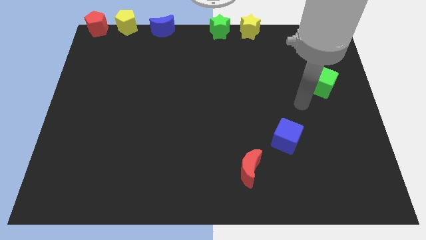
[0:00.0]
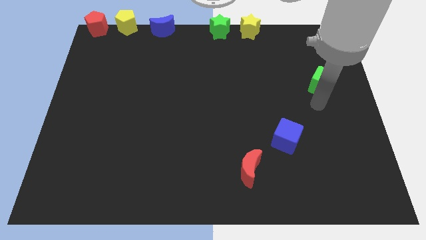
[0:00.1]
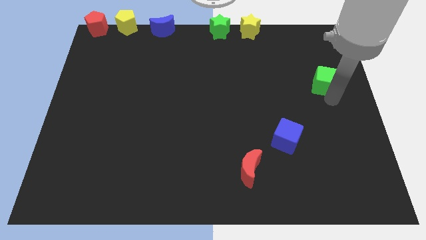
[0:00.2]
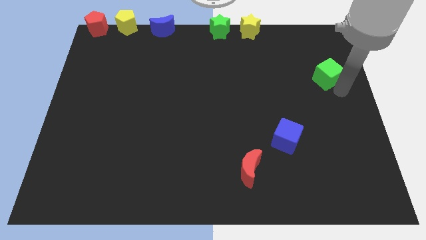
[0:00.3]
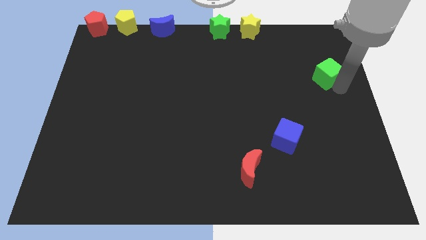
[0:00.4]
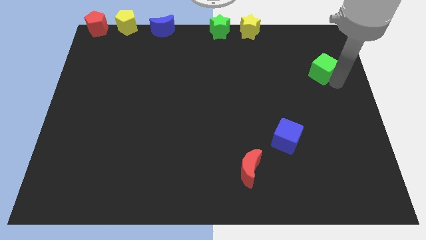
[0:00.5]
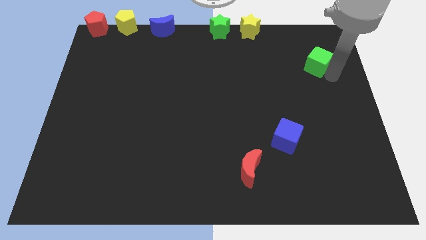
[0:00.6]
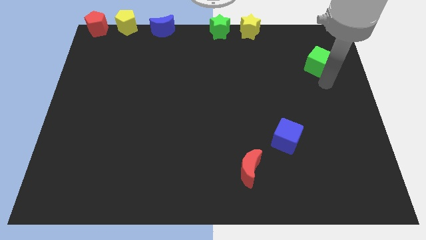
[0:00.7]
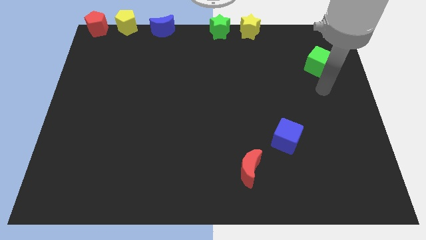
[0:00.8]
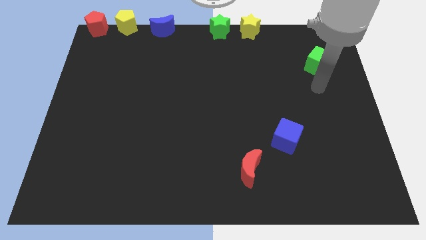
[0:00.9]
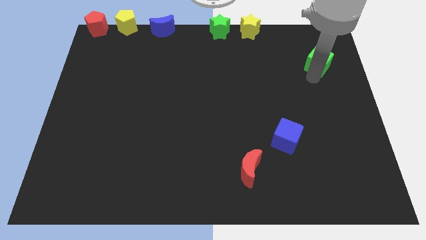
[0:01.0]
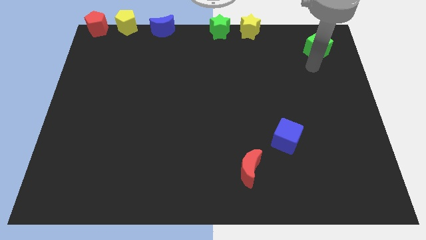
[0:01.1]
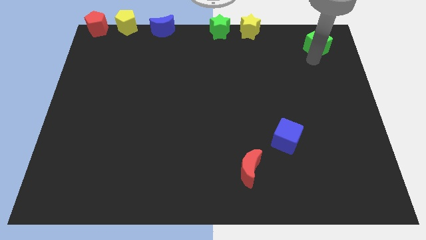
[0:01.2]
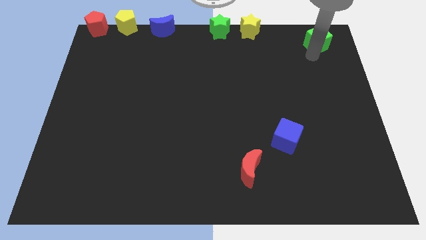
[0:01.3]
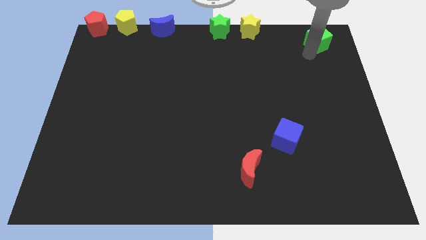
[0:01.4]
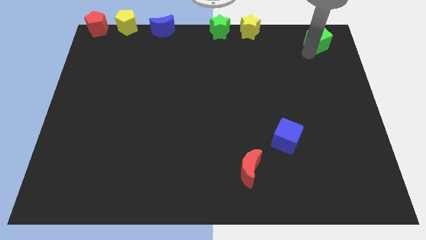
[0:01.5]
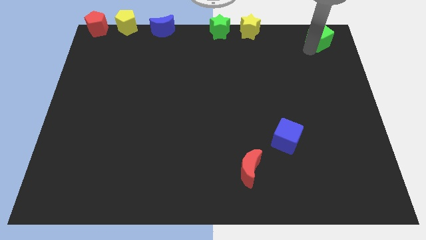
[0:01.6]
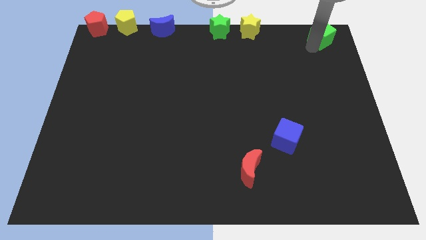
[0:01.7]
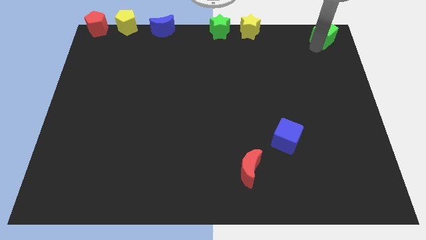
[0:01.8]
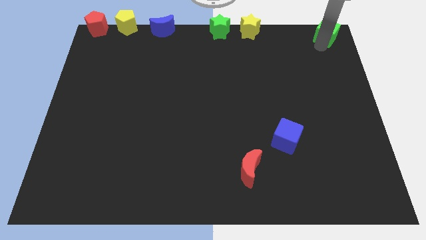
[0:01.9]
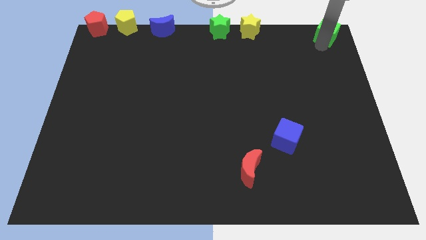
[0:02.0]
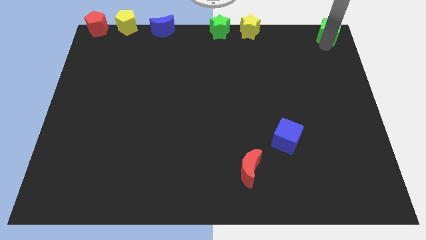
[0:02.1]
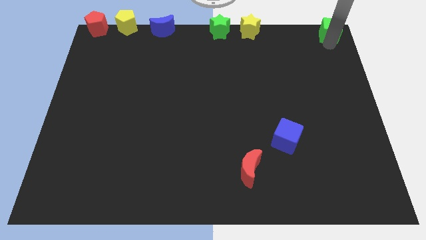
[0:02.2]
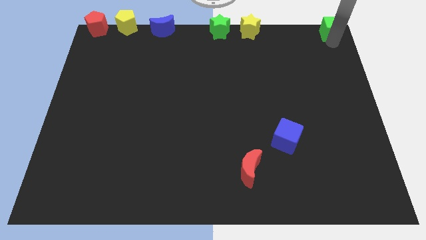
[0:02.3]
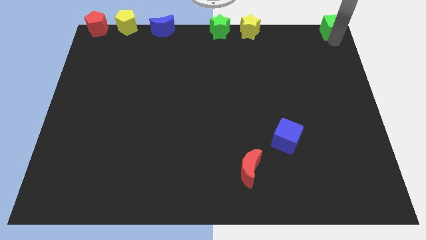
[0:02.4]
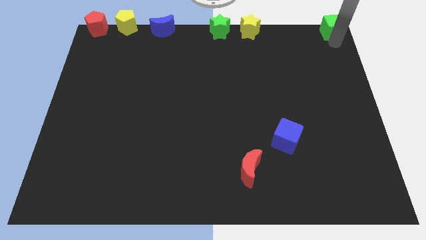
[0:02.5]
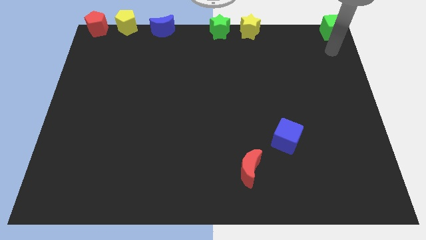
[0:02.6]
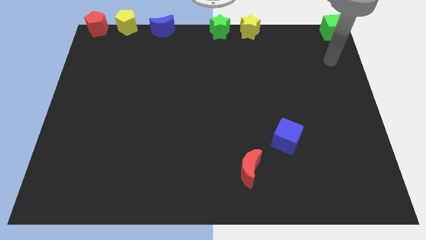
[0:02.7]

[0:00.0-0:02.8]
place the green cube to the top right corner side

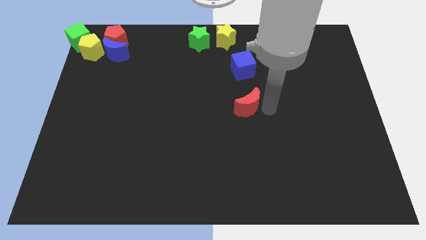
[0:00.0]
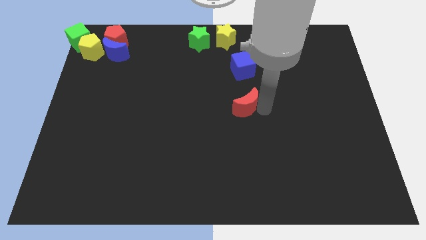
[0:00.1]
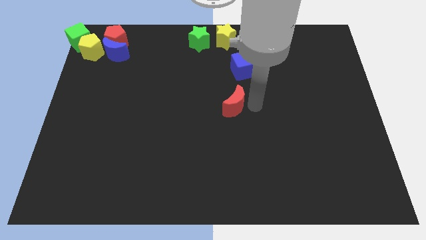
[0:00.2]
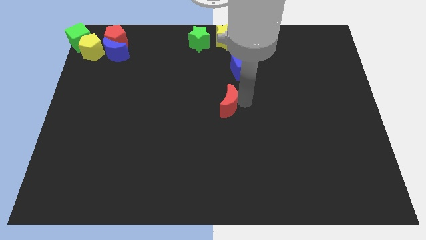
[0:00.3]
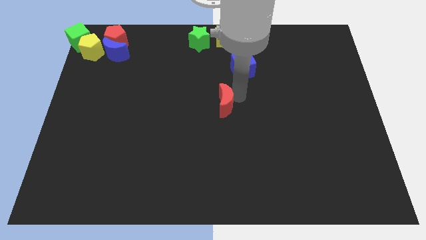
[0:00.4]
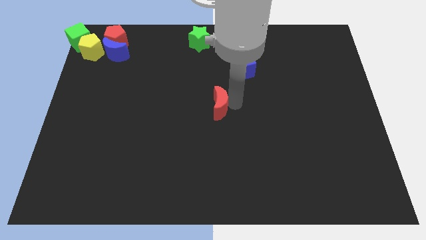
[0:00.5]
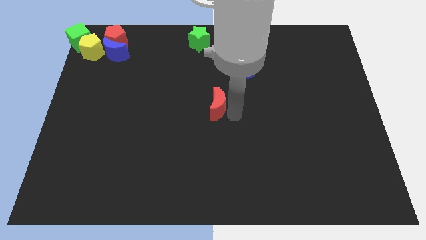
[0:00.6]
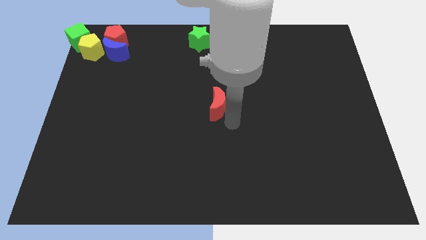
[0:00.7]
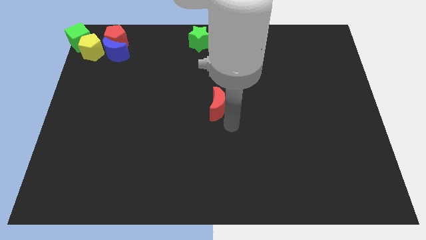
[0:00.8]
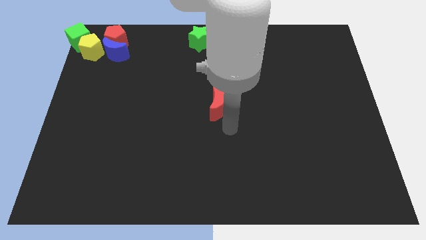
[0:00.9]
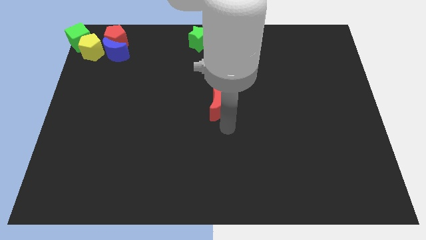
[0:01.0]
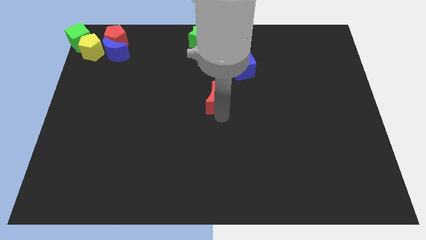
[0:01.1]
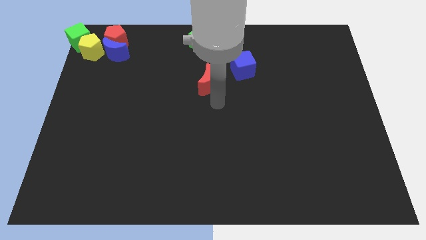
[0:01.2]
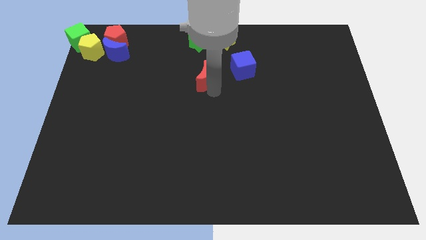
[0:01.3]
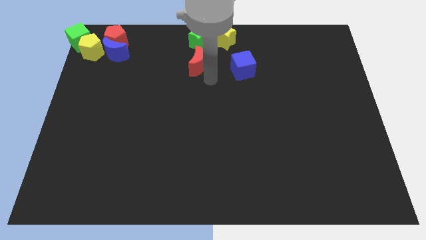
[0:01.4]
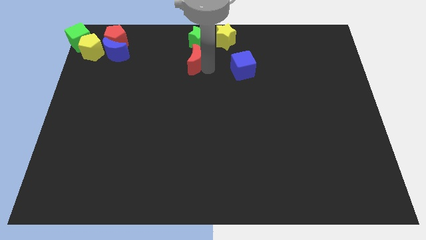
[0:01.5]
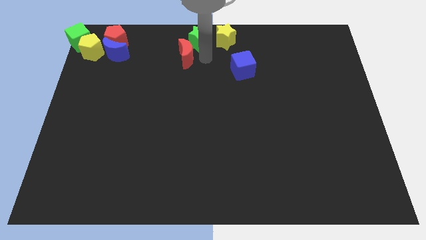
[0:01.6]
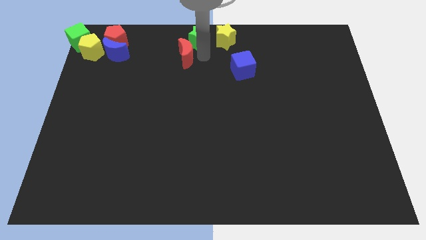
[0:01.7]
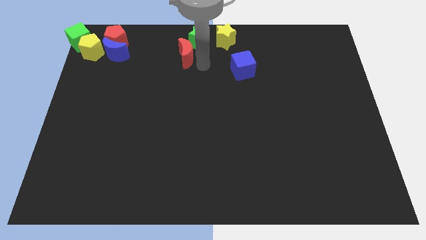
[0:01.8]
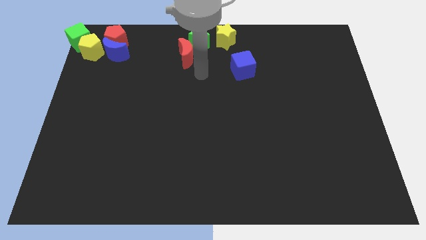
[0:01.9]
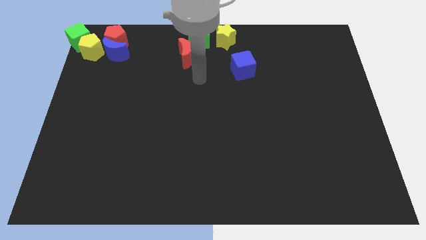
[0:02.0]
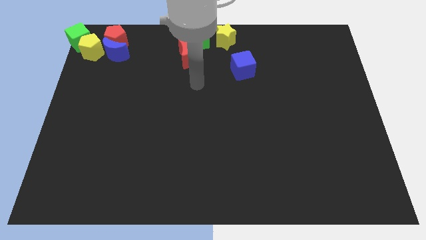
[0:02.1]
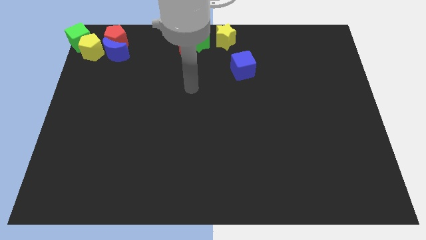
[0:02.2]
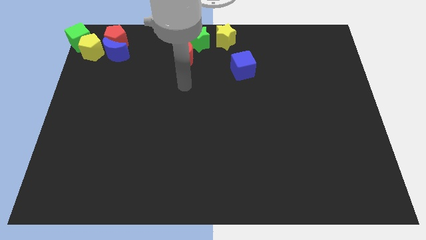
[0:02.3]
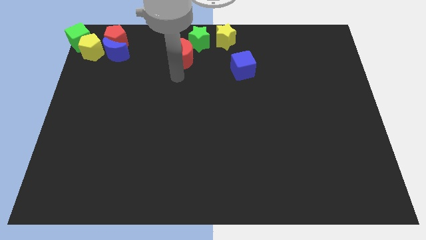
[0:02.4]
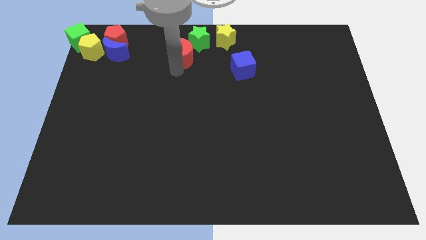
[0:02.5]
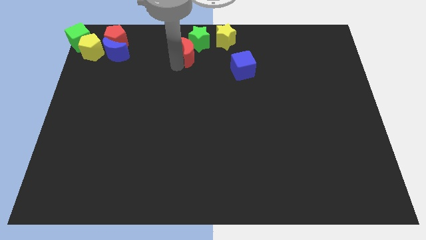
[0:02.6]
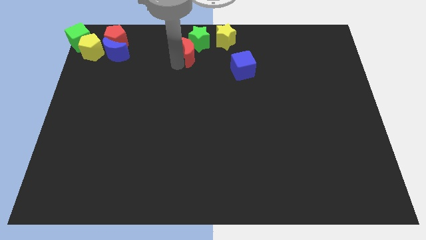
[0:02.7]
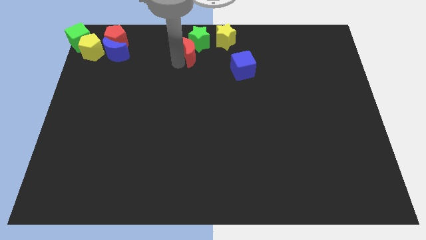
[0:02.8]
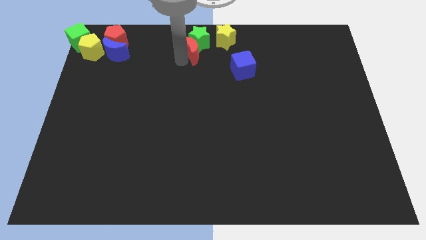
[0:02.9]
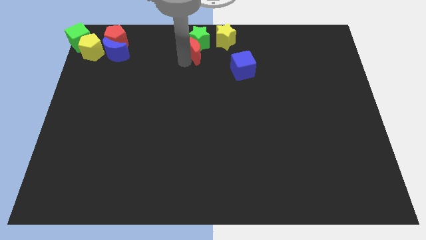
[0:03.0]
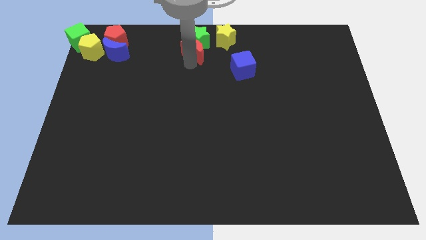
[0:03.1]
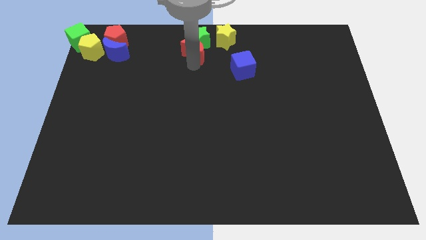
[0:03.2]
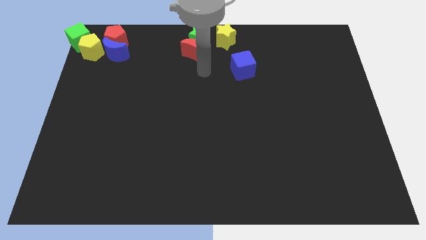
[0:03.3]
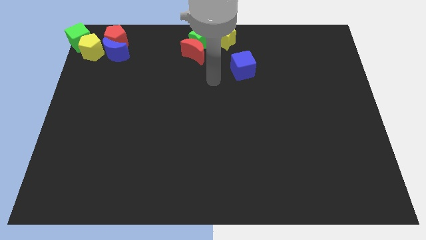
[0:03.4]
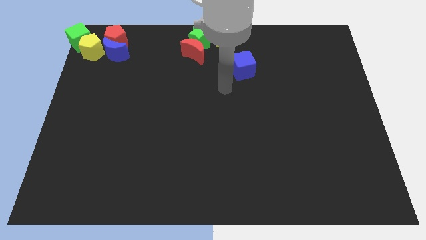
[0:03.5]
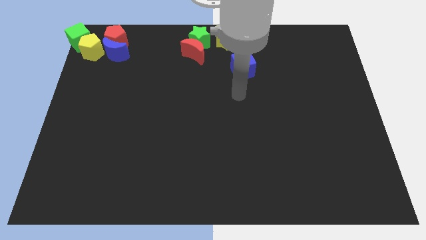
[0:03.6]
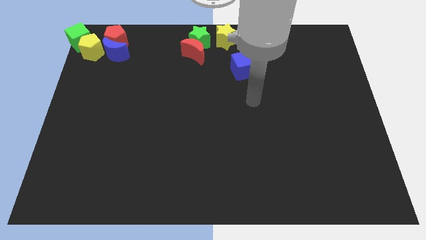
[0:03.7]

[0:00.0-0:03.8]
move the red crescent to the bottom side of the green star

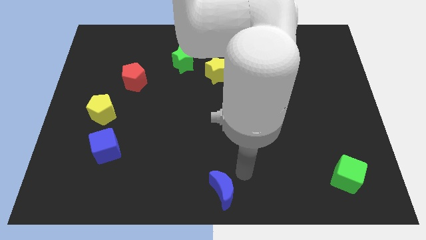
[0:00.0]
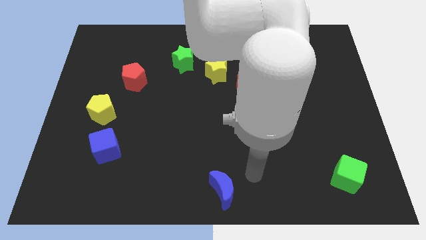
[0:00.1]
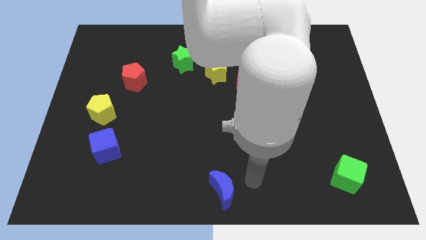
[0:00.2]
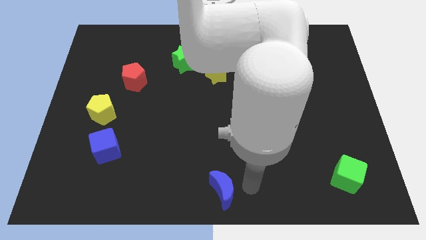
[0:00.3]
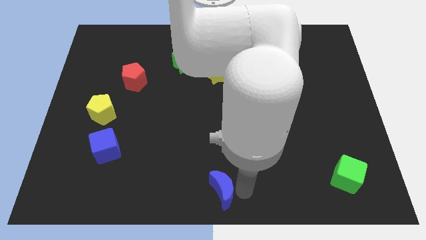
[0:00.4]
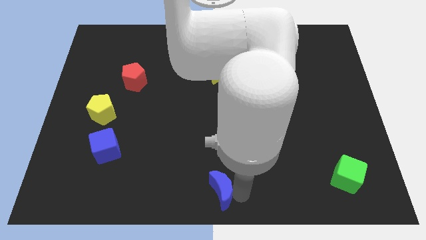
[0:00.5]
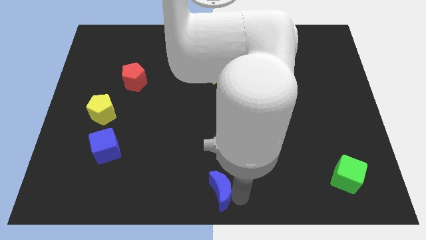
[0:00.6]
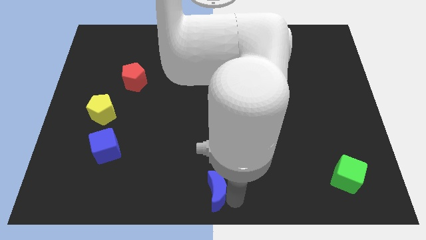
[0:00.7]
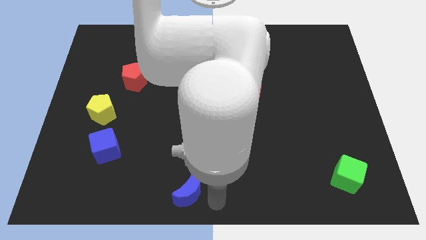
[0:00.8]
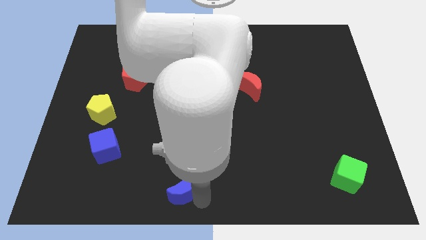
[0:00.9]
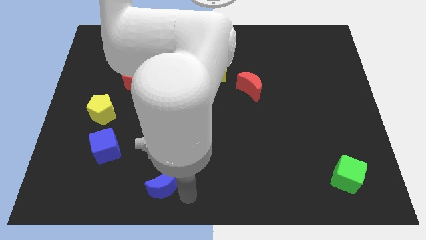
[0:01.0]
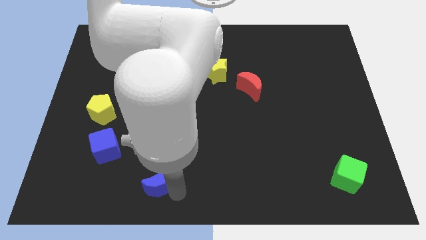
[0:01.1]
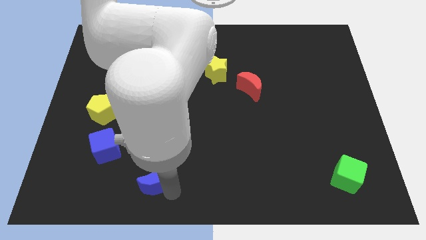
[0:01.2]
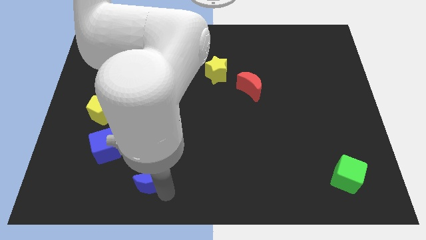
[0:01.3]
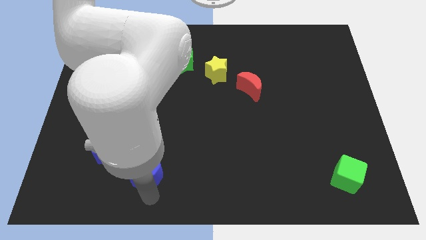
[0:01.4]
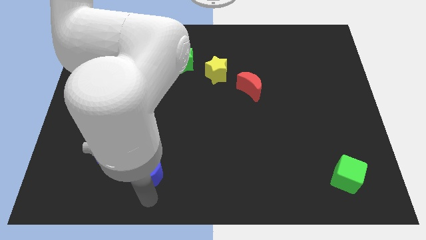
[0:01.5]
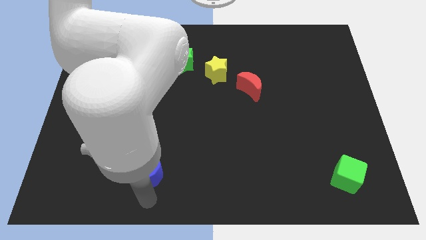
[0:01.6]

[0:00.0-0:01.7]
move the blue crescent towards blue cube

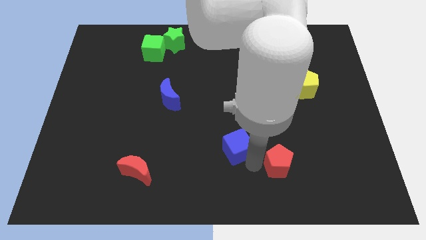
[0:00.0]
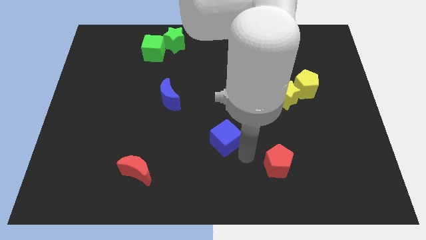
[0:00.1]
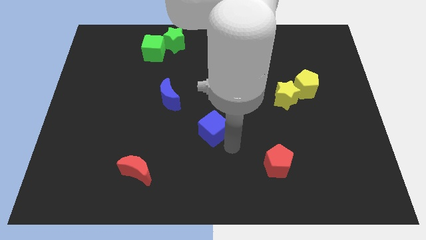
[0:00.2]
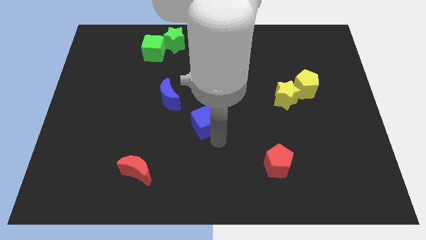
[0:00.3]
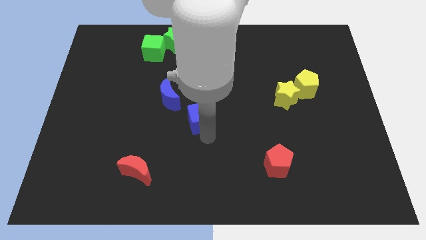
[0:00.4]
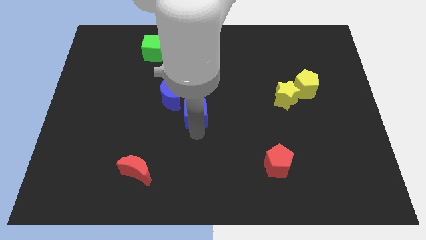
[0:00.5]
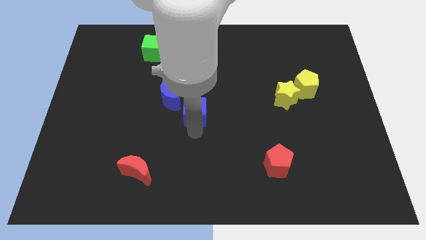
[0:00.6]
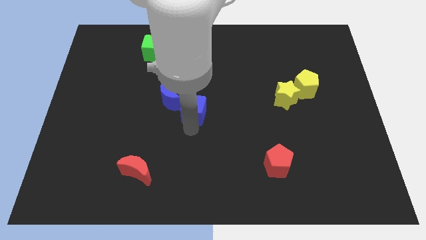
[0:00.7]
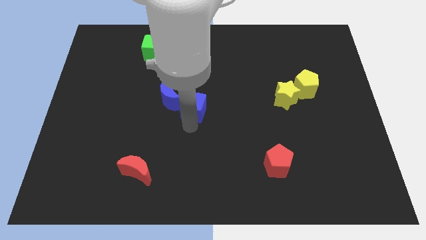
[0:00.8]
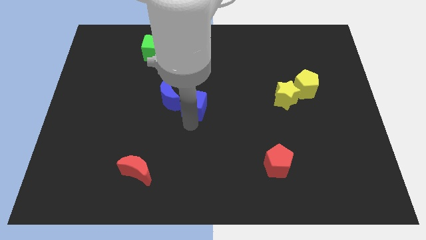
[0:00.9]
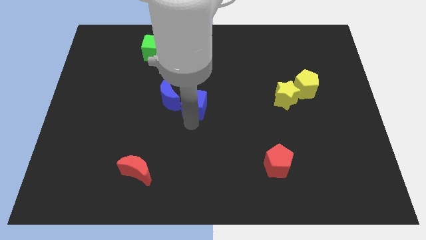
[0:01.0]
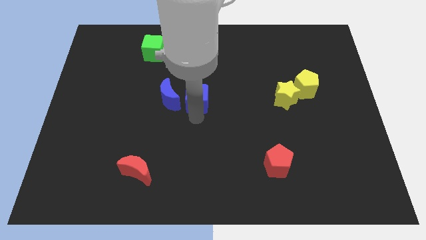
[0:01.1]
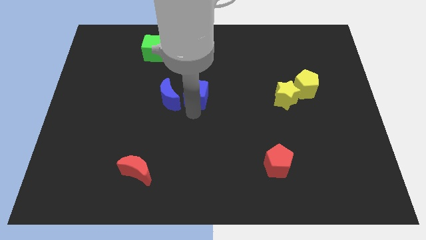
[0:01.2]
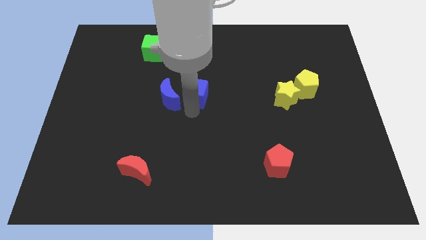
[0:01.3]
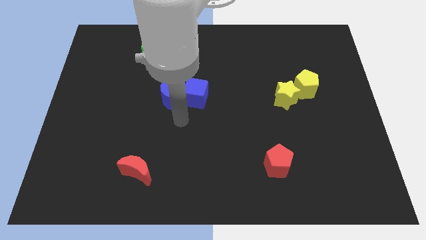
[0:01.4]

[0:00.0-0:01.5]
place blue cube to the right of the blue moon
